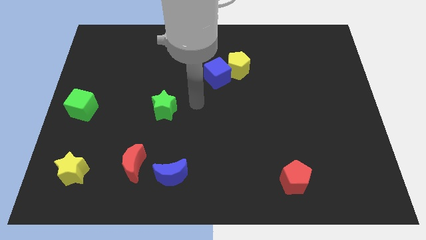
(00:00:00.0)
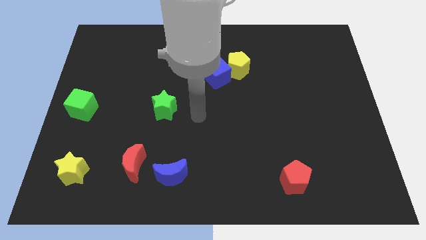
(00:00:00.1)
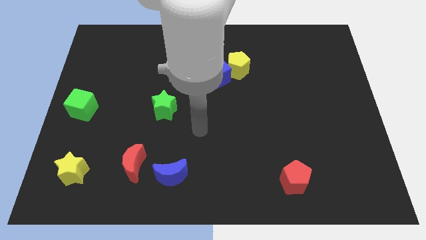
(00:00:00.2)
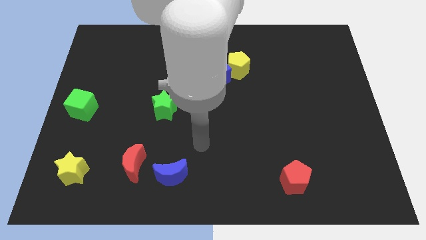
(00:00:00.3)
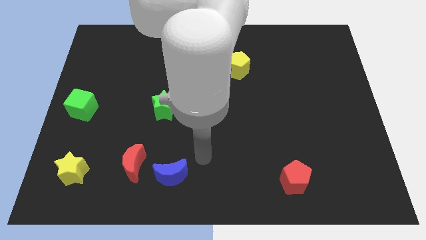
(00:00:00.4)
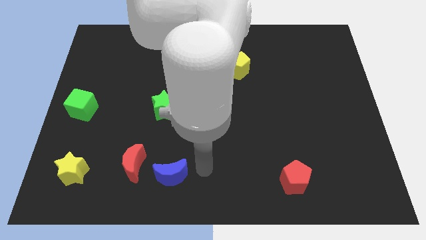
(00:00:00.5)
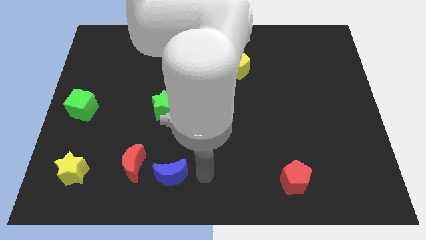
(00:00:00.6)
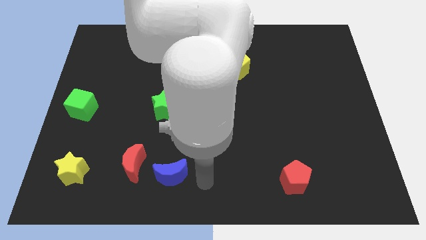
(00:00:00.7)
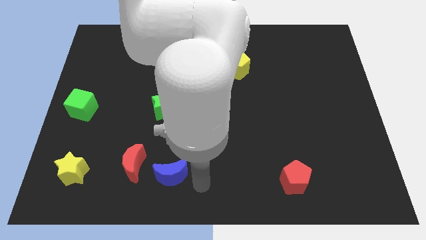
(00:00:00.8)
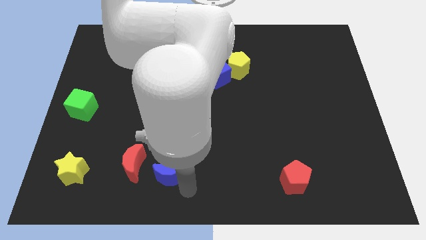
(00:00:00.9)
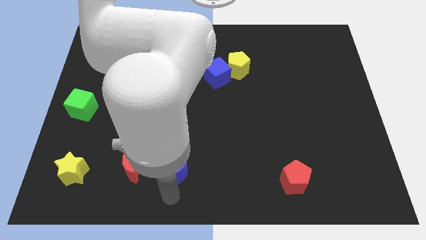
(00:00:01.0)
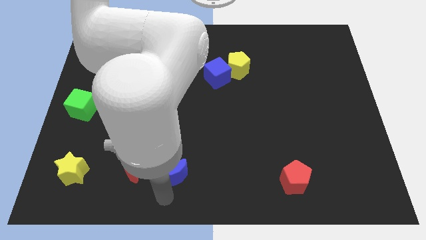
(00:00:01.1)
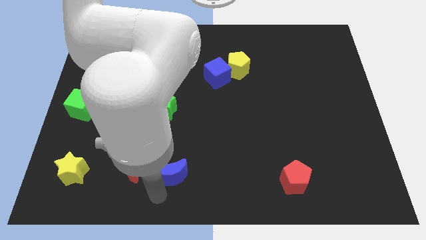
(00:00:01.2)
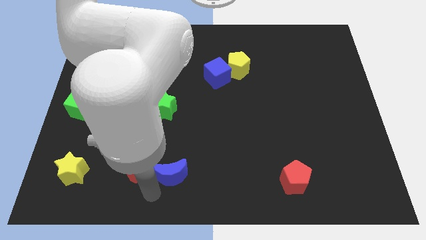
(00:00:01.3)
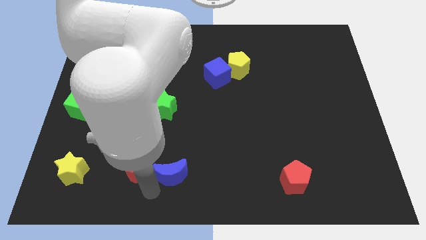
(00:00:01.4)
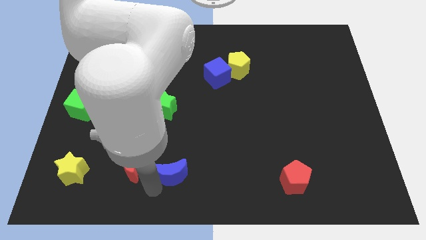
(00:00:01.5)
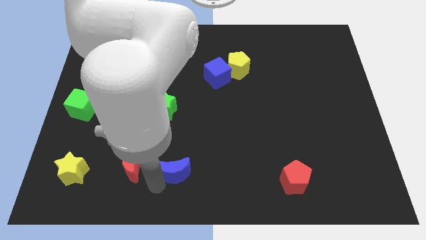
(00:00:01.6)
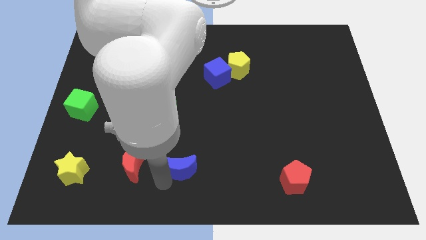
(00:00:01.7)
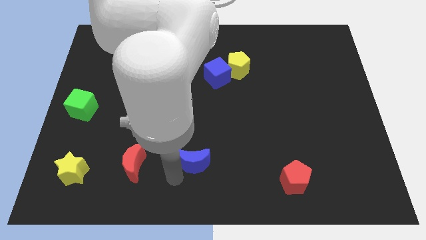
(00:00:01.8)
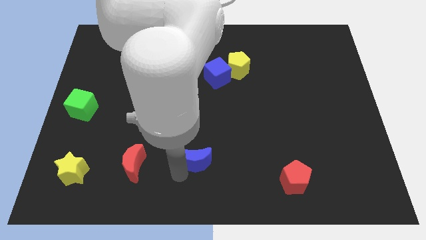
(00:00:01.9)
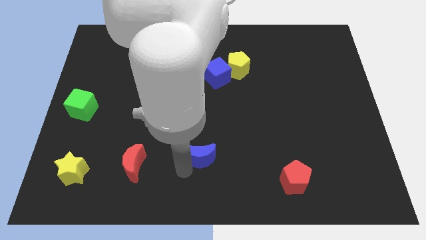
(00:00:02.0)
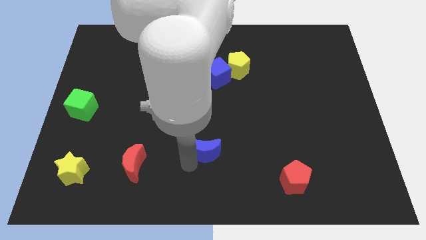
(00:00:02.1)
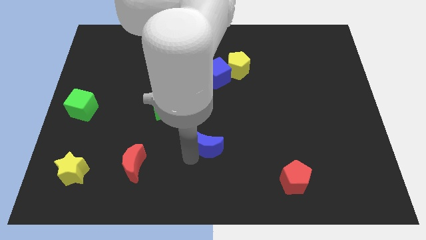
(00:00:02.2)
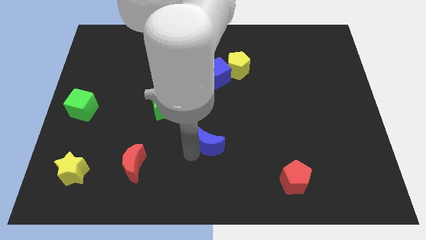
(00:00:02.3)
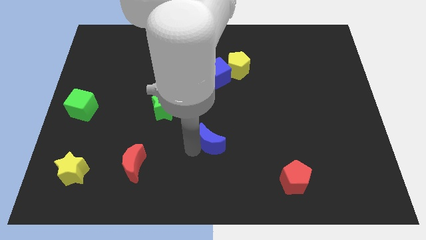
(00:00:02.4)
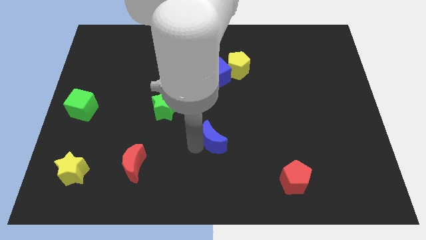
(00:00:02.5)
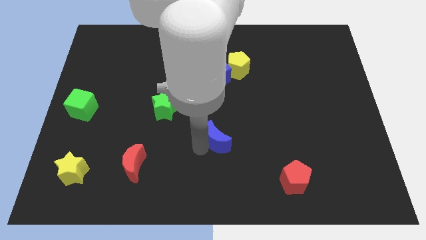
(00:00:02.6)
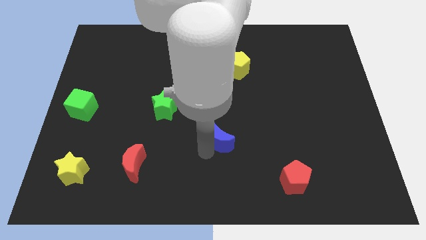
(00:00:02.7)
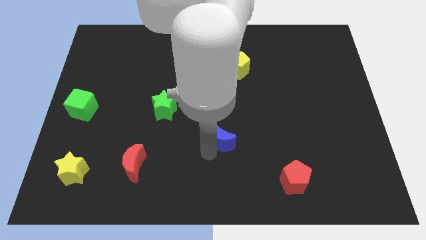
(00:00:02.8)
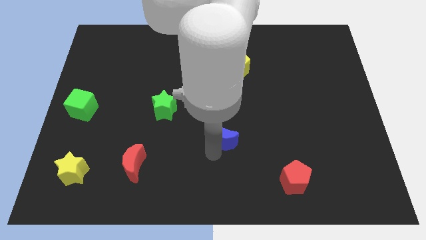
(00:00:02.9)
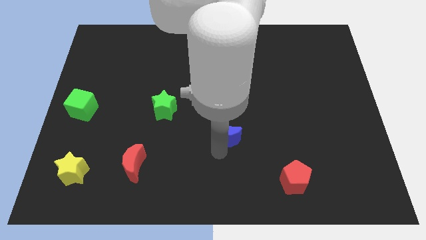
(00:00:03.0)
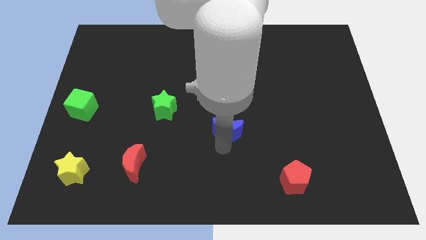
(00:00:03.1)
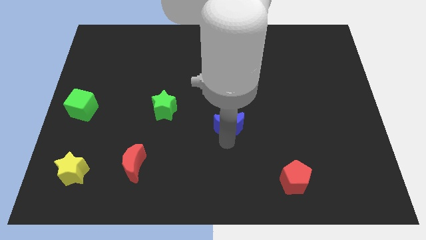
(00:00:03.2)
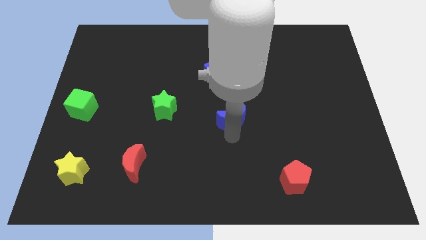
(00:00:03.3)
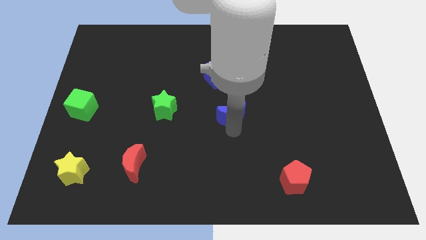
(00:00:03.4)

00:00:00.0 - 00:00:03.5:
push the blue crescent to the right of the green star

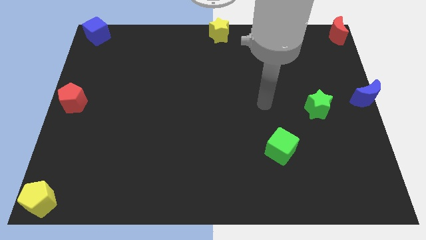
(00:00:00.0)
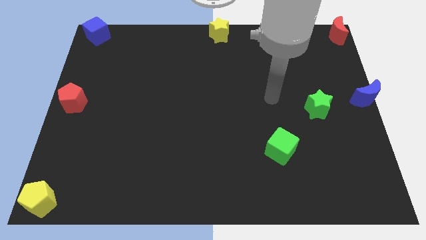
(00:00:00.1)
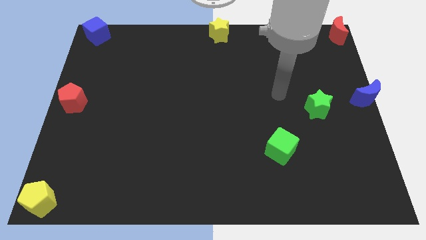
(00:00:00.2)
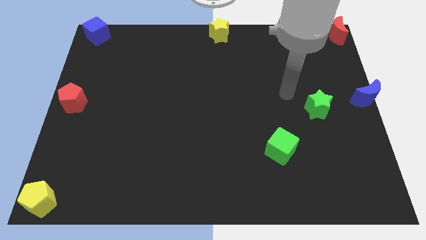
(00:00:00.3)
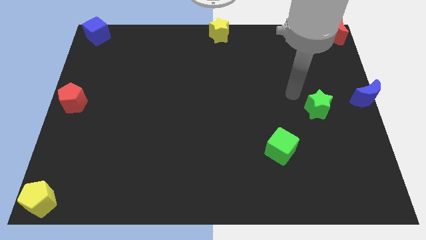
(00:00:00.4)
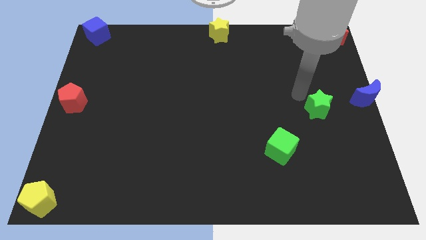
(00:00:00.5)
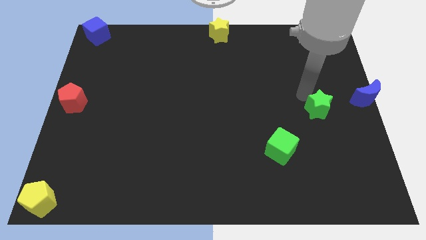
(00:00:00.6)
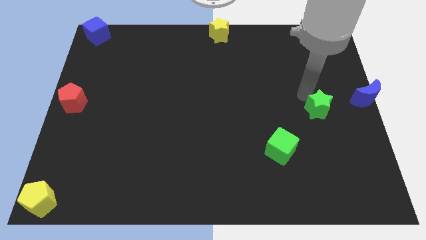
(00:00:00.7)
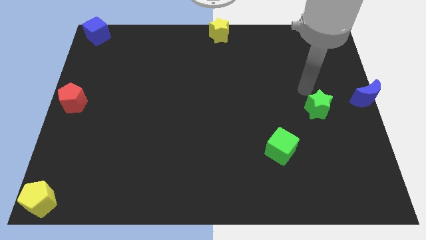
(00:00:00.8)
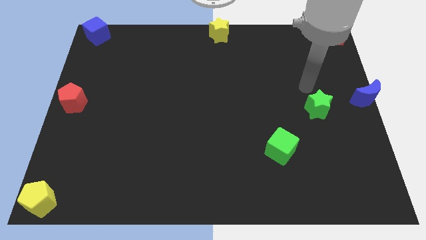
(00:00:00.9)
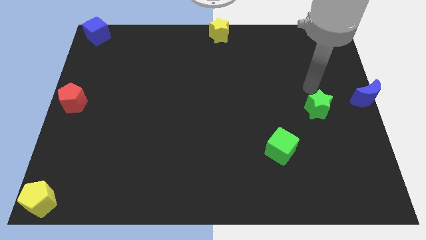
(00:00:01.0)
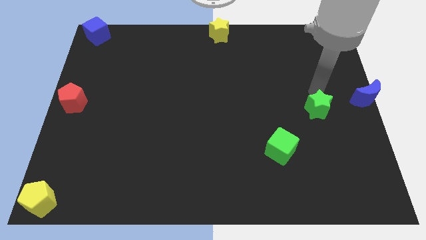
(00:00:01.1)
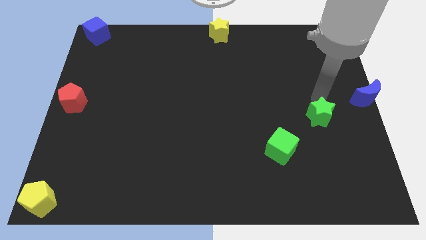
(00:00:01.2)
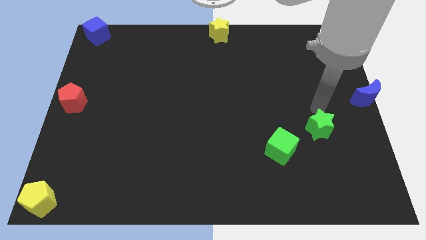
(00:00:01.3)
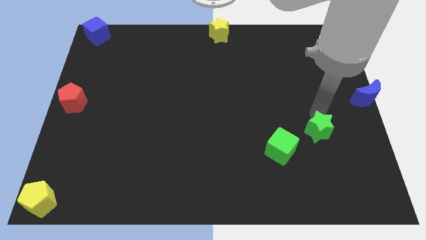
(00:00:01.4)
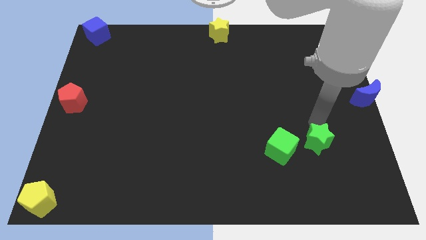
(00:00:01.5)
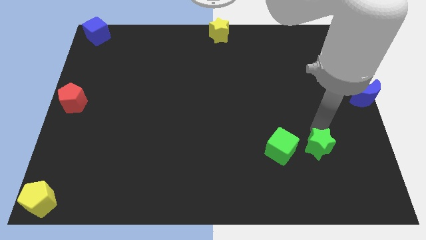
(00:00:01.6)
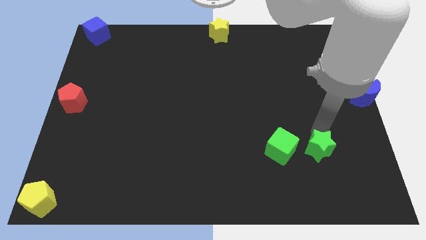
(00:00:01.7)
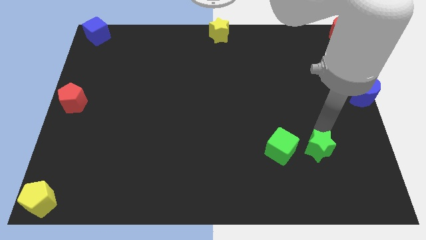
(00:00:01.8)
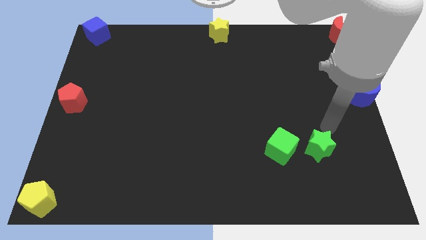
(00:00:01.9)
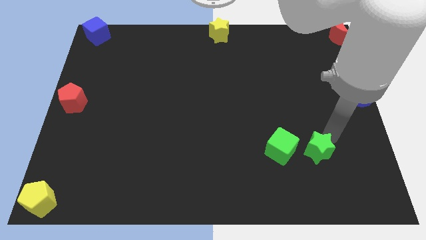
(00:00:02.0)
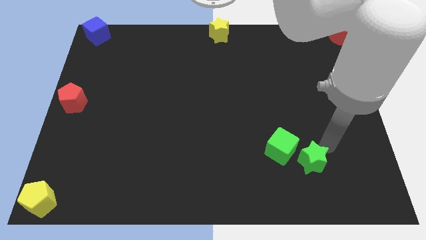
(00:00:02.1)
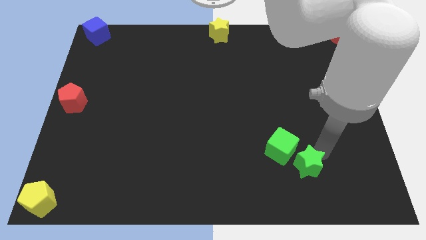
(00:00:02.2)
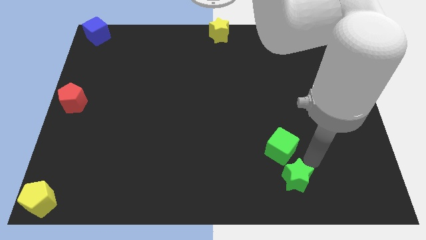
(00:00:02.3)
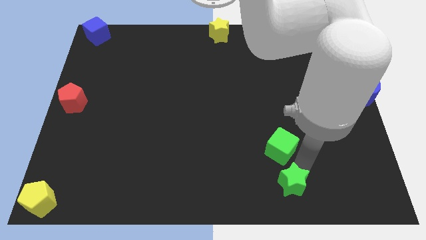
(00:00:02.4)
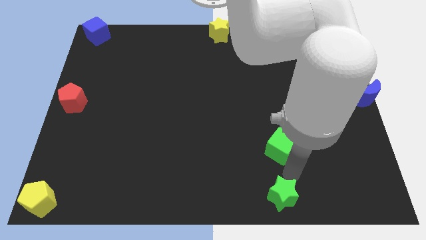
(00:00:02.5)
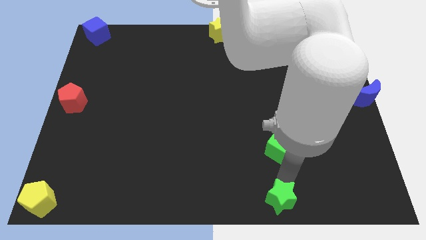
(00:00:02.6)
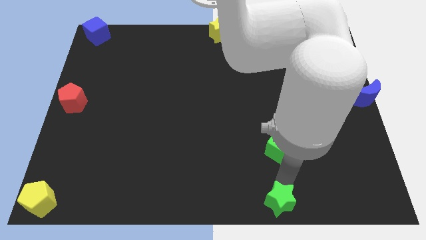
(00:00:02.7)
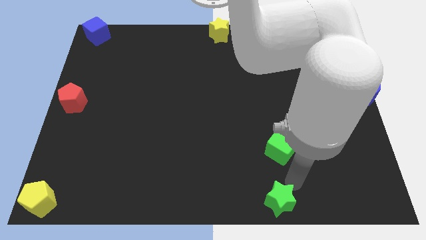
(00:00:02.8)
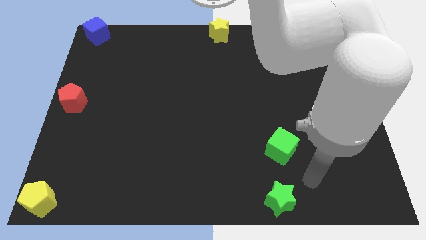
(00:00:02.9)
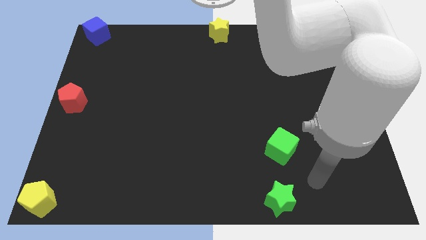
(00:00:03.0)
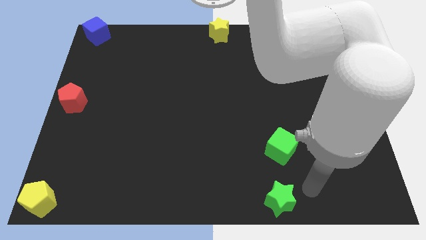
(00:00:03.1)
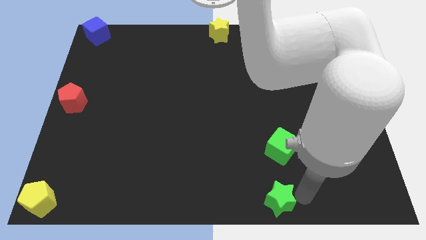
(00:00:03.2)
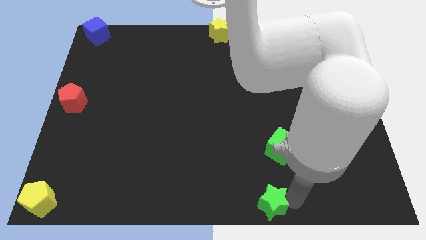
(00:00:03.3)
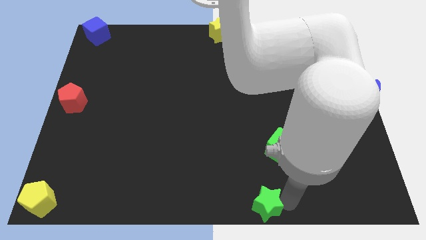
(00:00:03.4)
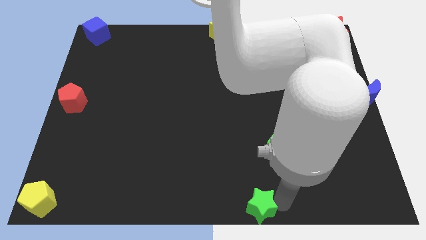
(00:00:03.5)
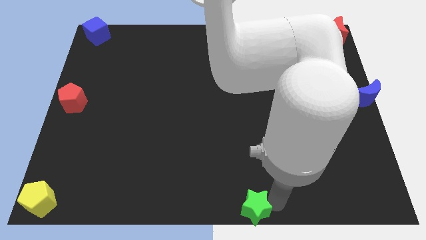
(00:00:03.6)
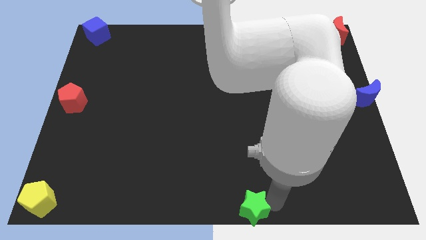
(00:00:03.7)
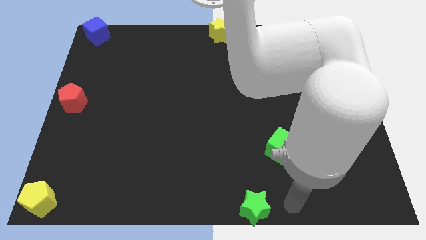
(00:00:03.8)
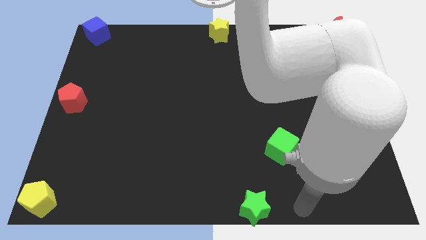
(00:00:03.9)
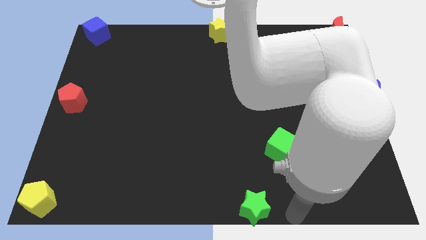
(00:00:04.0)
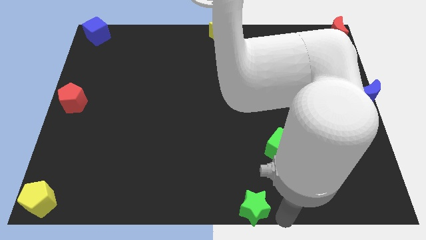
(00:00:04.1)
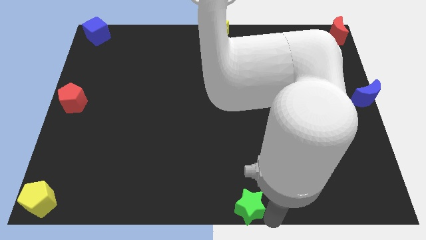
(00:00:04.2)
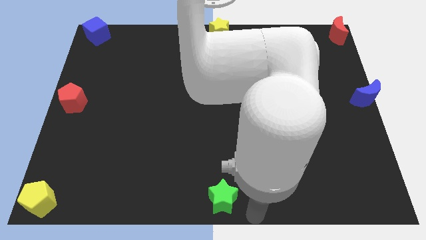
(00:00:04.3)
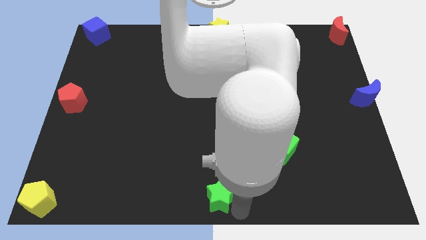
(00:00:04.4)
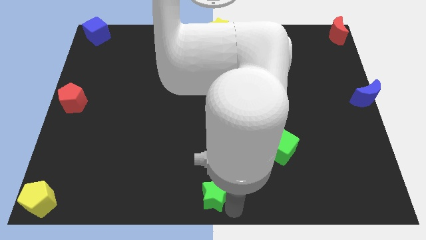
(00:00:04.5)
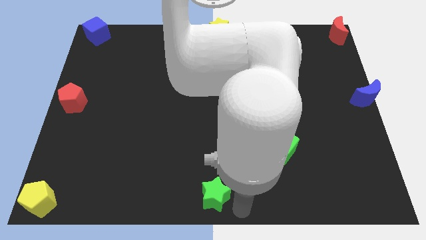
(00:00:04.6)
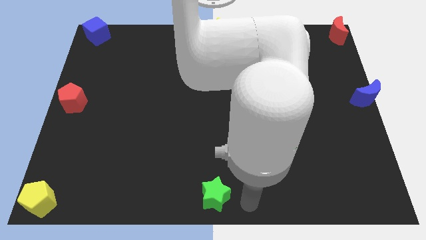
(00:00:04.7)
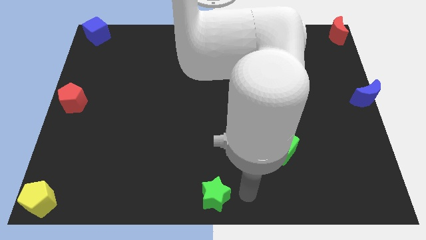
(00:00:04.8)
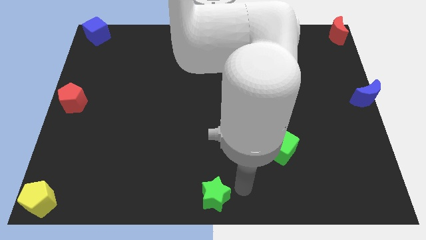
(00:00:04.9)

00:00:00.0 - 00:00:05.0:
push the green star to the bottom center of the board

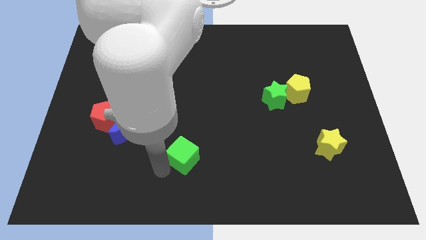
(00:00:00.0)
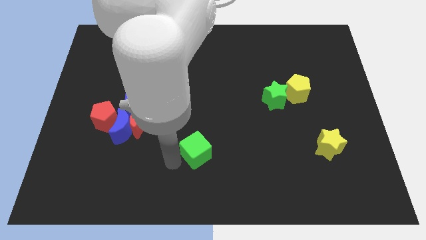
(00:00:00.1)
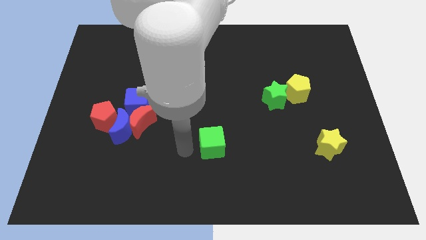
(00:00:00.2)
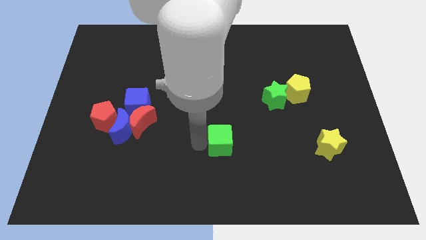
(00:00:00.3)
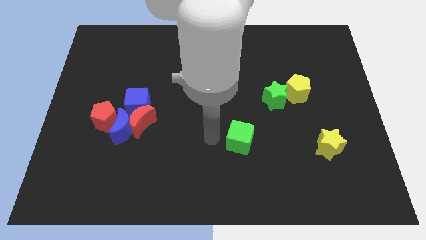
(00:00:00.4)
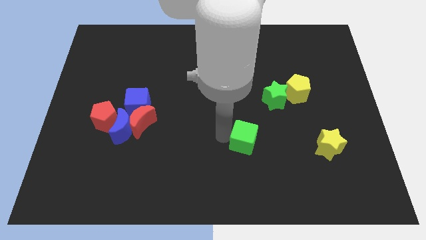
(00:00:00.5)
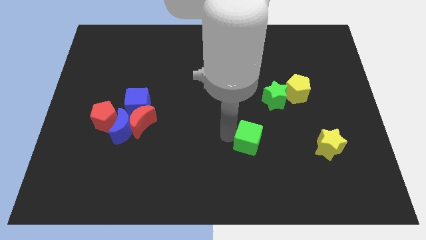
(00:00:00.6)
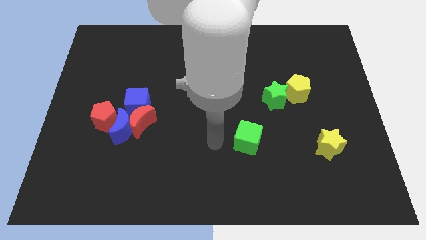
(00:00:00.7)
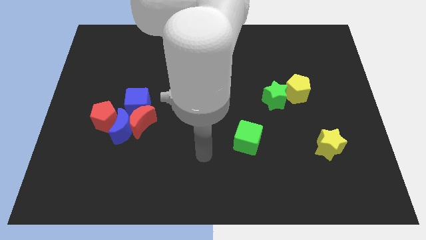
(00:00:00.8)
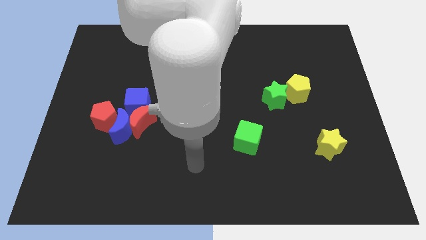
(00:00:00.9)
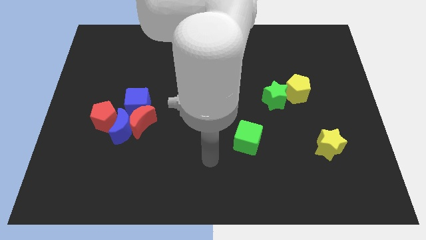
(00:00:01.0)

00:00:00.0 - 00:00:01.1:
place the green cube parallel to the yellow star
